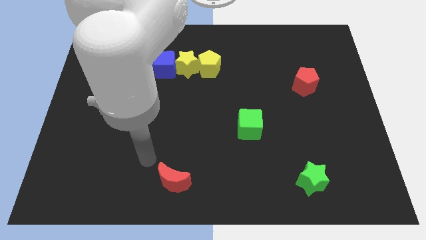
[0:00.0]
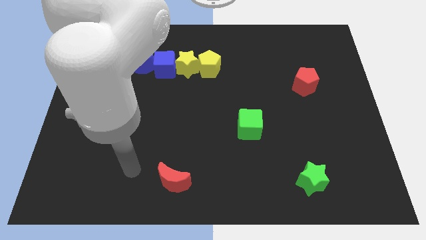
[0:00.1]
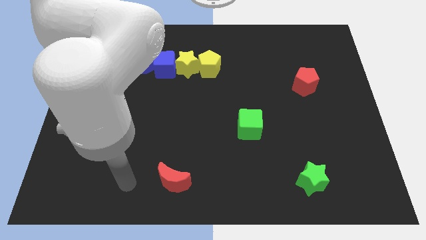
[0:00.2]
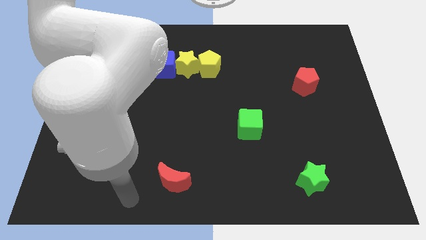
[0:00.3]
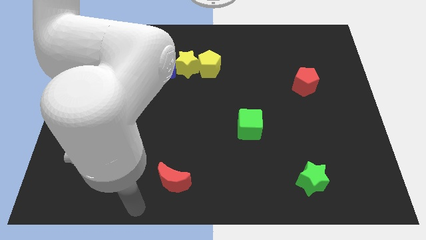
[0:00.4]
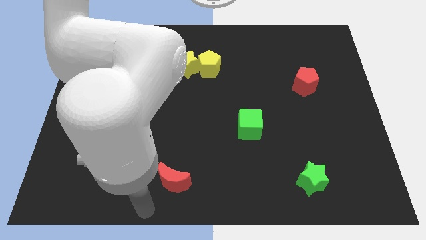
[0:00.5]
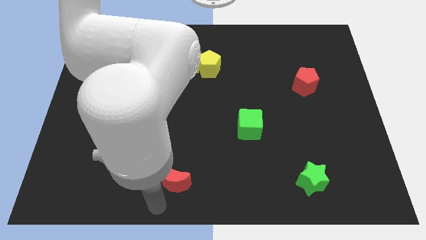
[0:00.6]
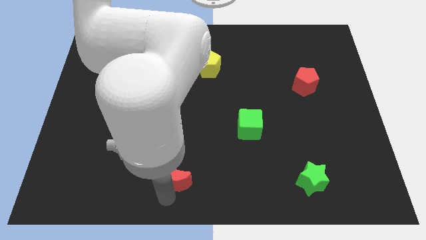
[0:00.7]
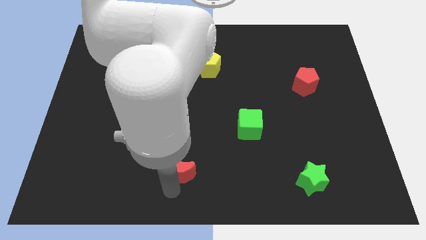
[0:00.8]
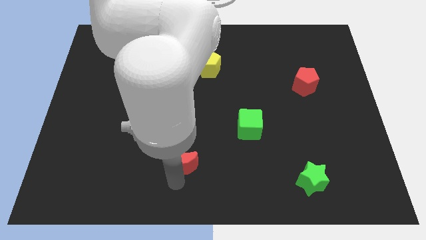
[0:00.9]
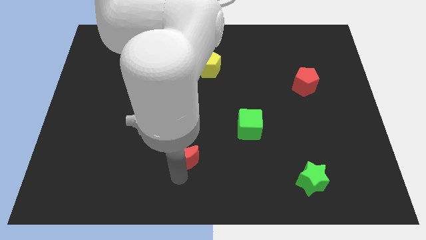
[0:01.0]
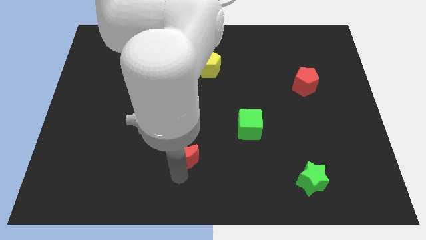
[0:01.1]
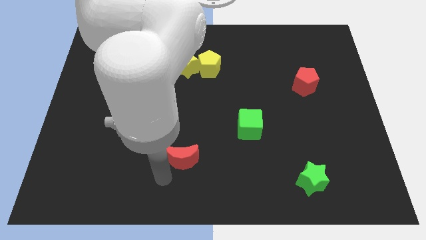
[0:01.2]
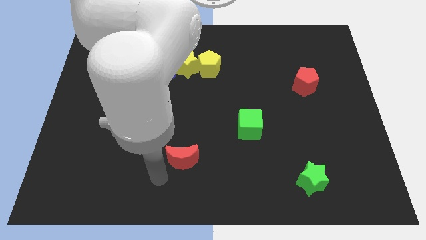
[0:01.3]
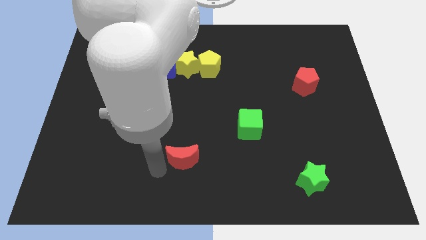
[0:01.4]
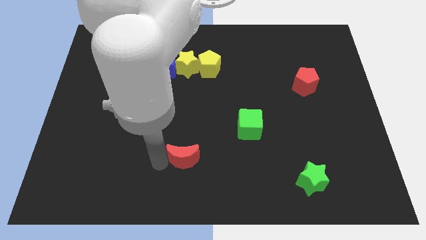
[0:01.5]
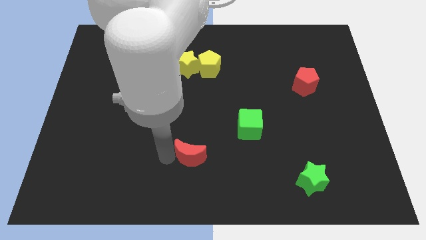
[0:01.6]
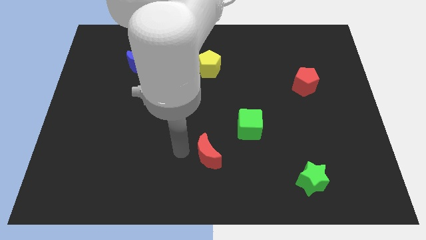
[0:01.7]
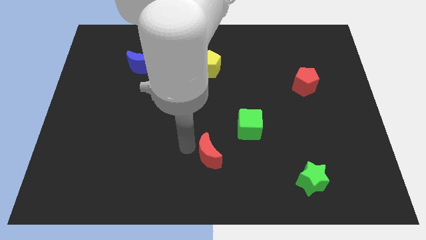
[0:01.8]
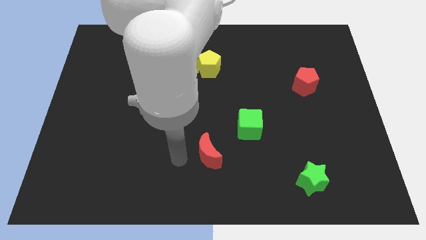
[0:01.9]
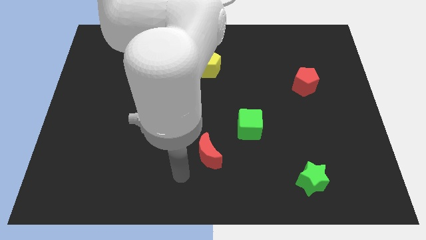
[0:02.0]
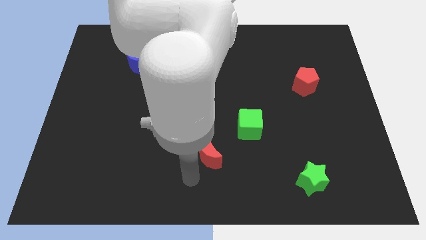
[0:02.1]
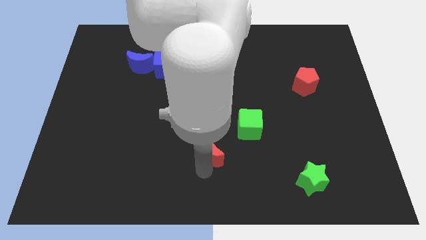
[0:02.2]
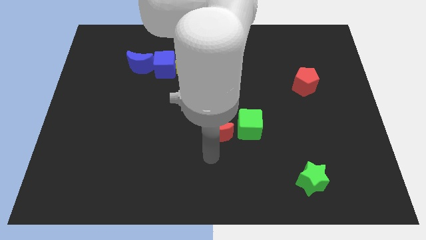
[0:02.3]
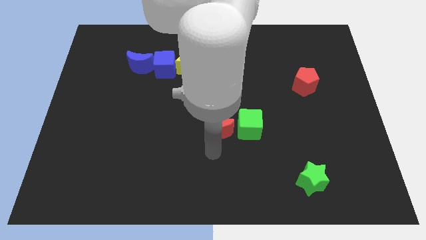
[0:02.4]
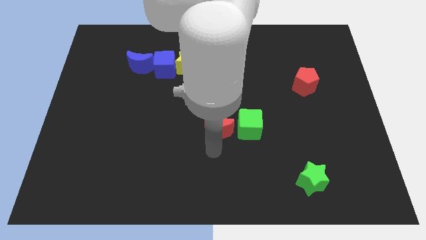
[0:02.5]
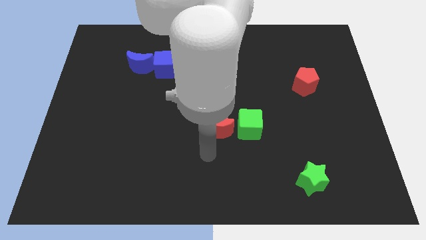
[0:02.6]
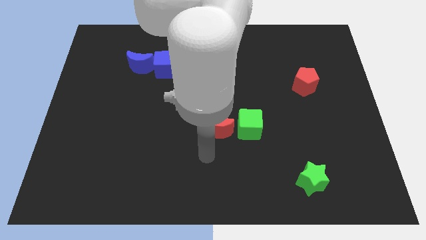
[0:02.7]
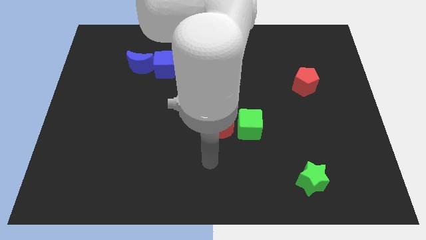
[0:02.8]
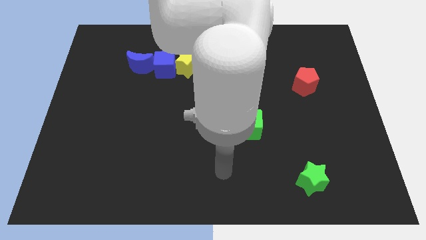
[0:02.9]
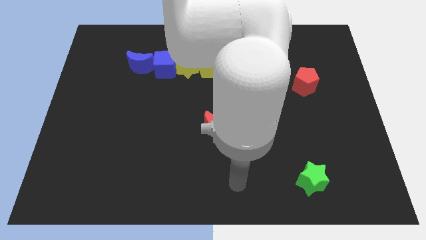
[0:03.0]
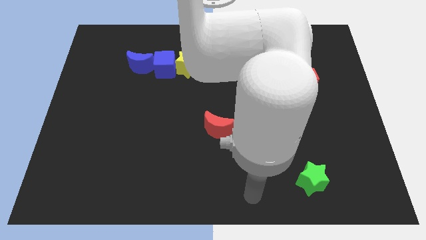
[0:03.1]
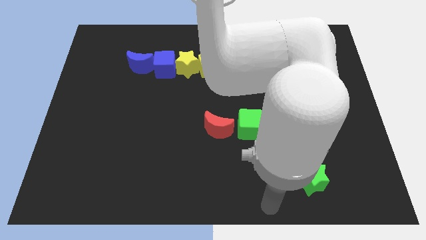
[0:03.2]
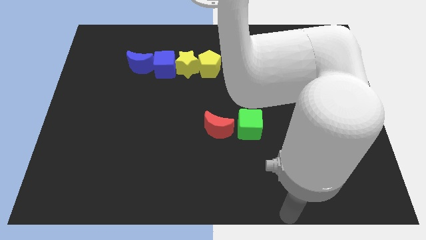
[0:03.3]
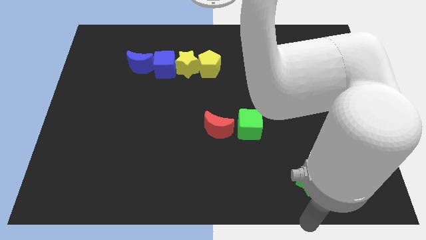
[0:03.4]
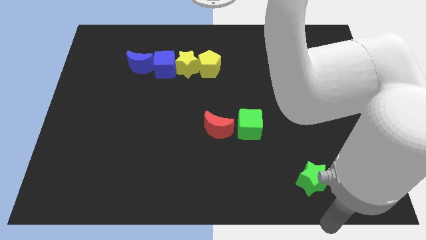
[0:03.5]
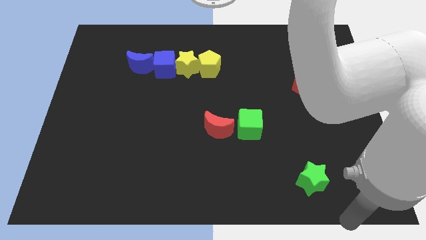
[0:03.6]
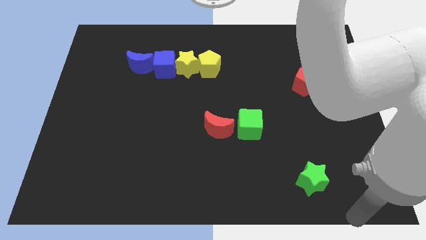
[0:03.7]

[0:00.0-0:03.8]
place the red pentagon to the left side of green cube

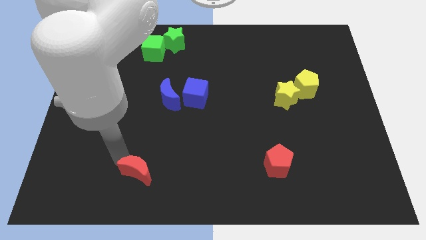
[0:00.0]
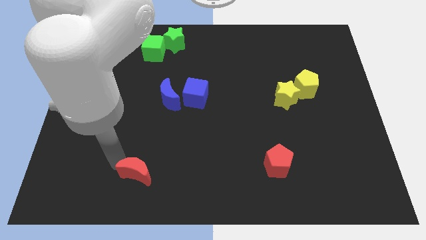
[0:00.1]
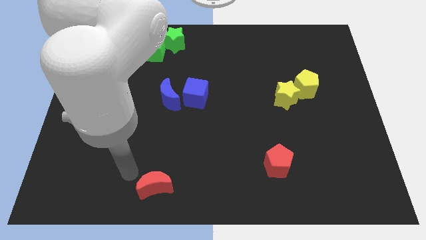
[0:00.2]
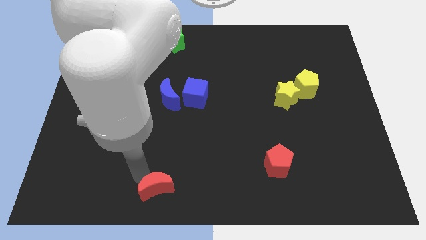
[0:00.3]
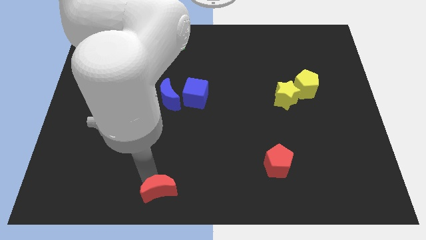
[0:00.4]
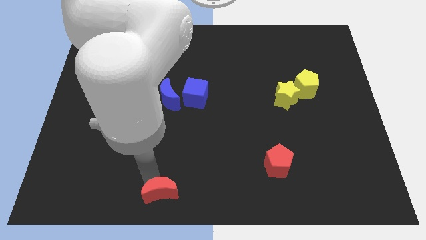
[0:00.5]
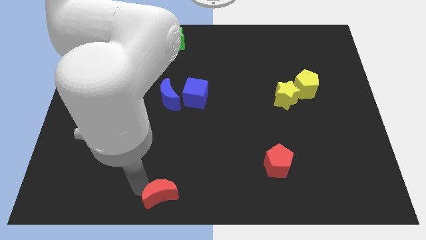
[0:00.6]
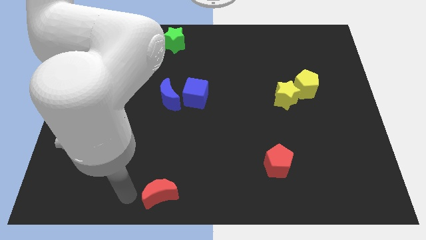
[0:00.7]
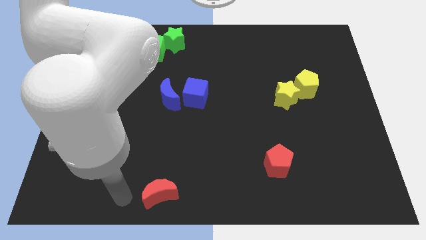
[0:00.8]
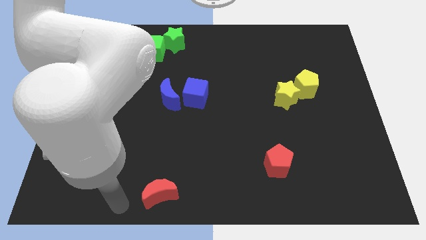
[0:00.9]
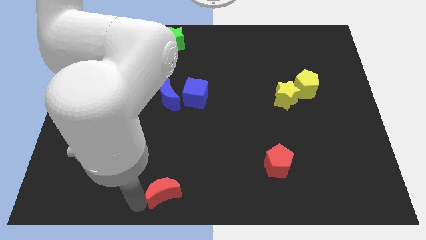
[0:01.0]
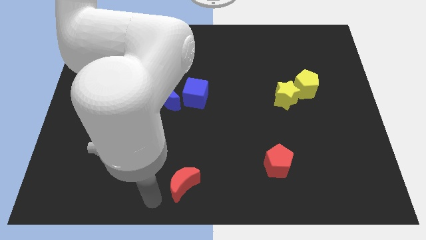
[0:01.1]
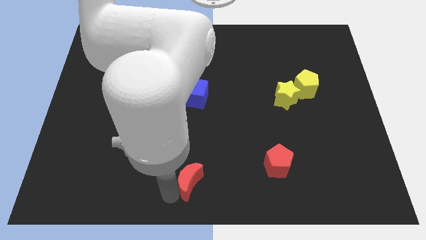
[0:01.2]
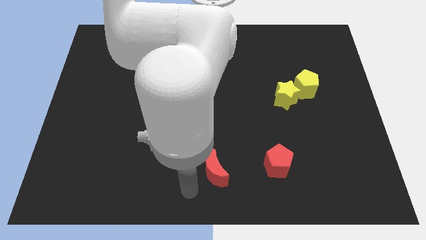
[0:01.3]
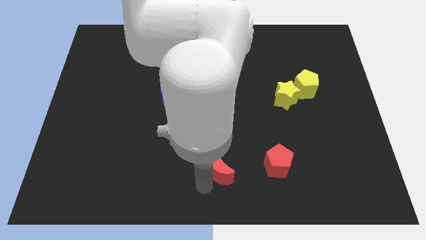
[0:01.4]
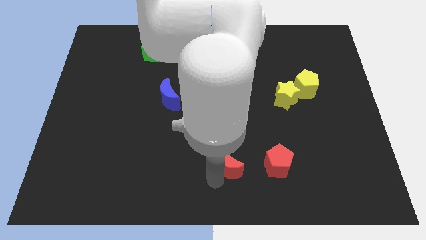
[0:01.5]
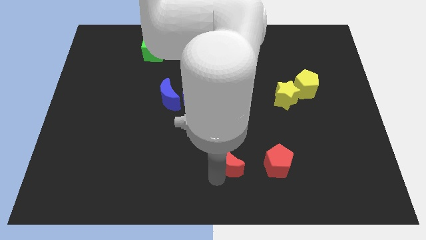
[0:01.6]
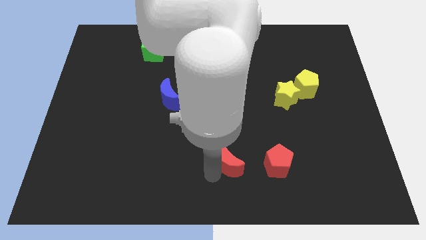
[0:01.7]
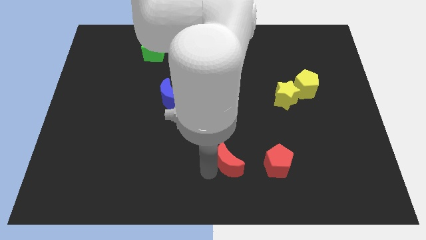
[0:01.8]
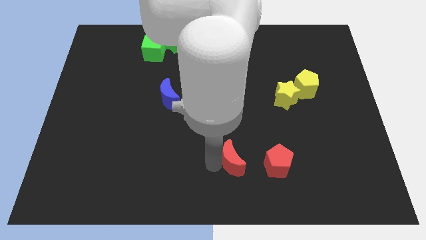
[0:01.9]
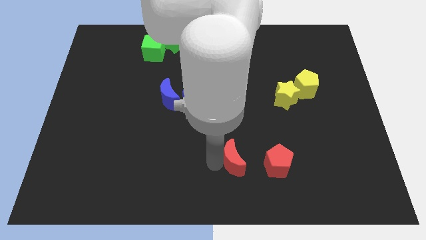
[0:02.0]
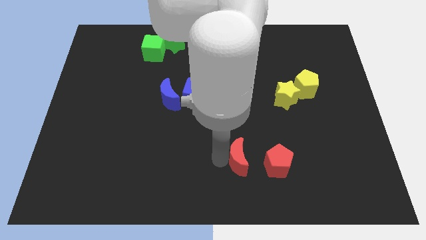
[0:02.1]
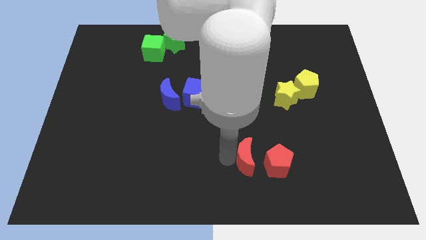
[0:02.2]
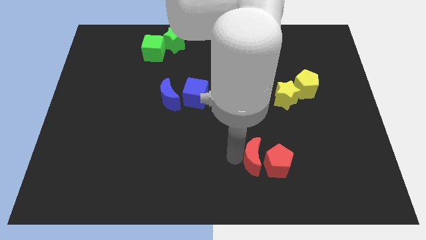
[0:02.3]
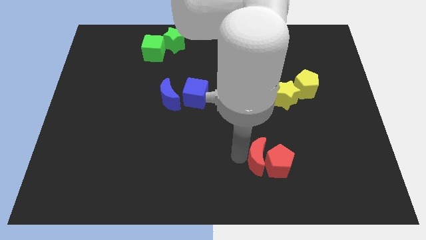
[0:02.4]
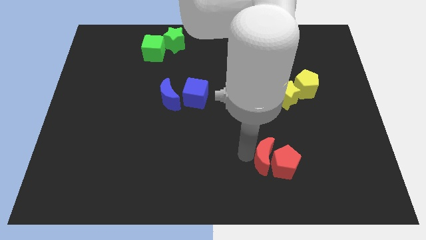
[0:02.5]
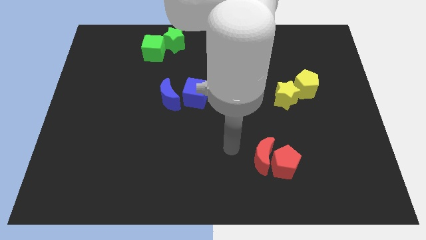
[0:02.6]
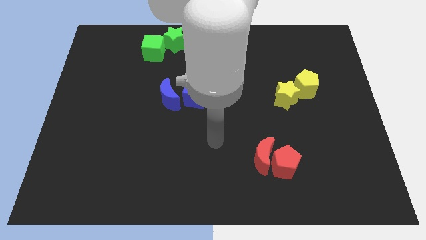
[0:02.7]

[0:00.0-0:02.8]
push the red crescent into the red pentagon

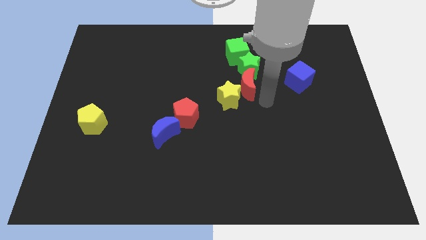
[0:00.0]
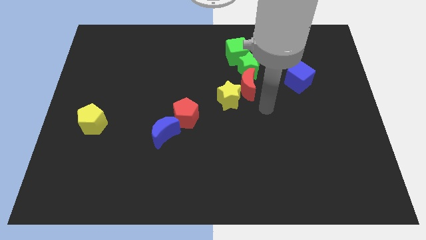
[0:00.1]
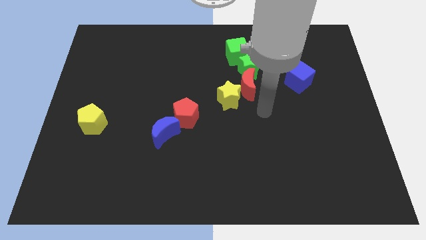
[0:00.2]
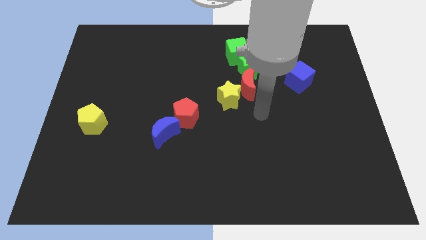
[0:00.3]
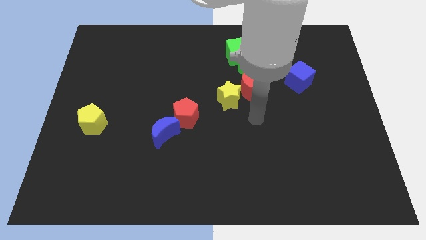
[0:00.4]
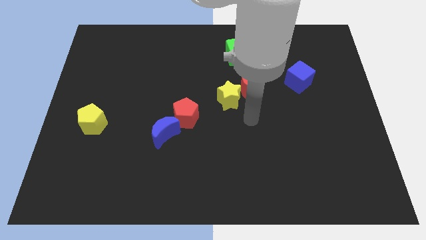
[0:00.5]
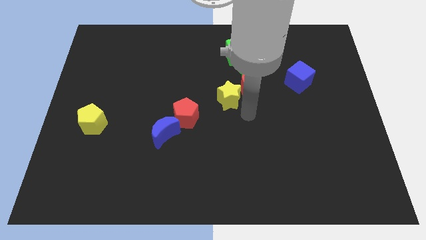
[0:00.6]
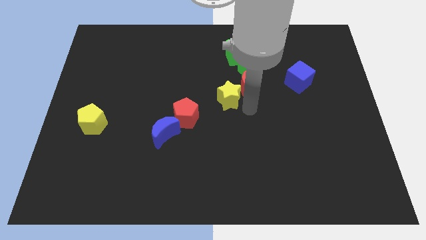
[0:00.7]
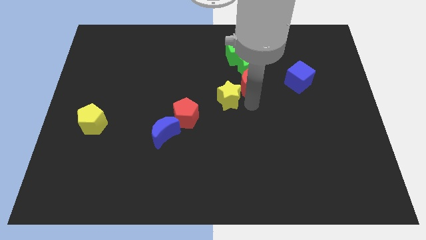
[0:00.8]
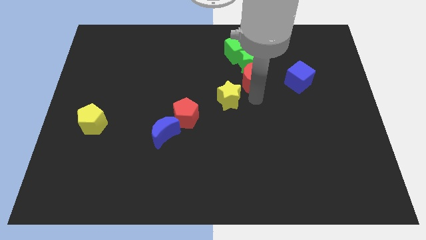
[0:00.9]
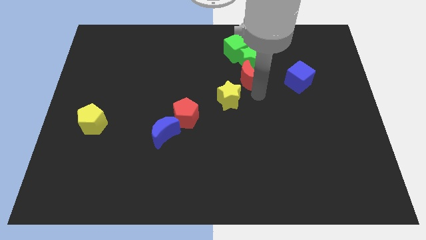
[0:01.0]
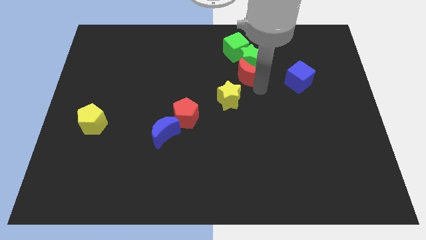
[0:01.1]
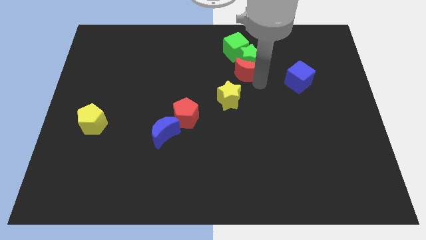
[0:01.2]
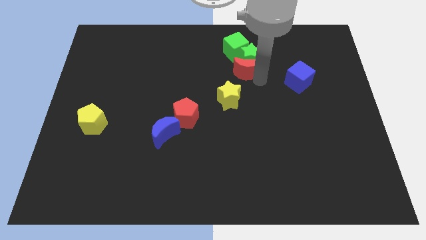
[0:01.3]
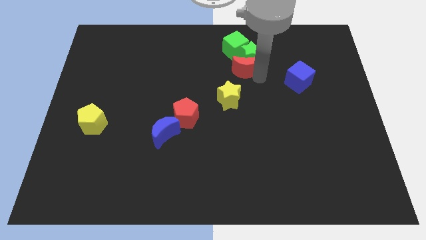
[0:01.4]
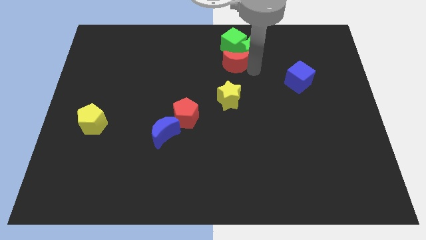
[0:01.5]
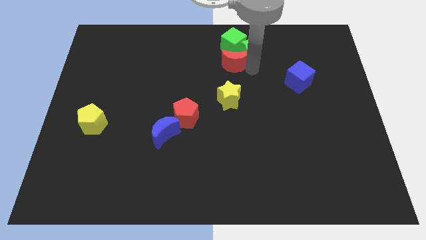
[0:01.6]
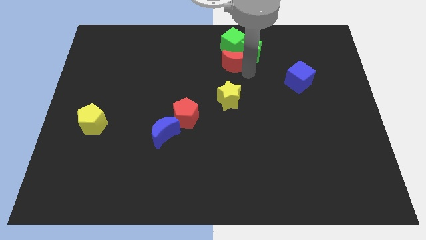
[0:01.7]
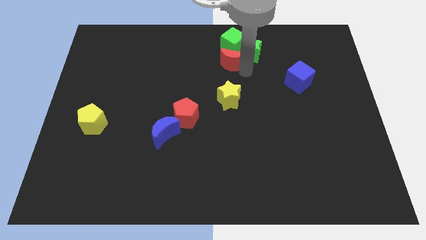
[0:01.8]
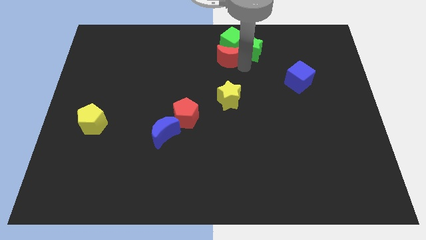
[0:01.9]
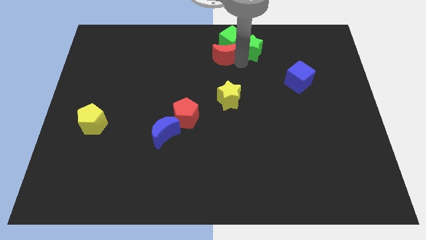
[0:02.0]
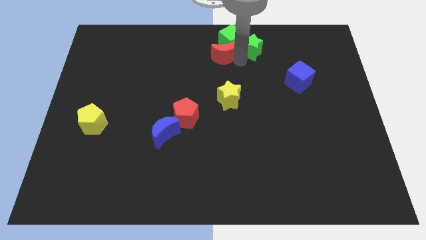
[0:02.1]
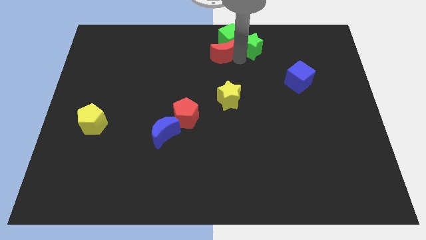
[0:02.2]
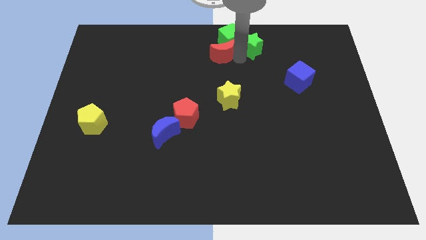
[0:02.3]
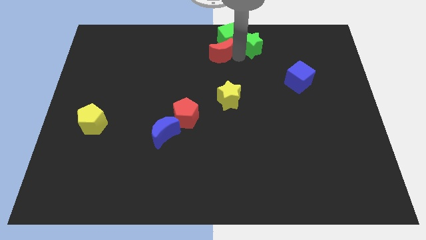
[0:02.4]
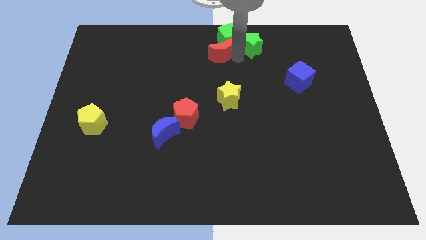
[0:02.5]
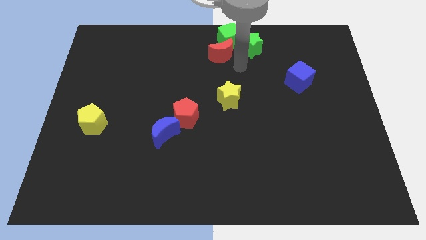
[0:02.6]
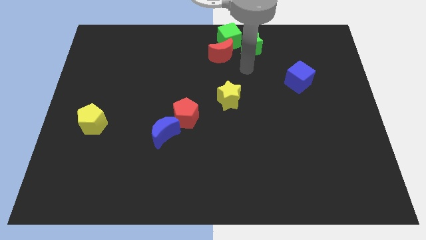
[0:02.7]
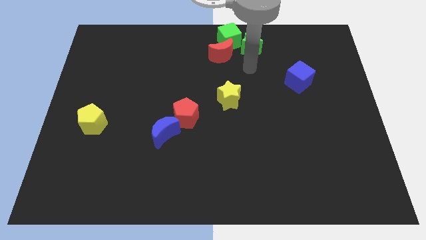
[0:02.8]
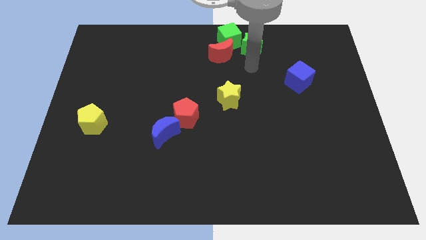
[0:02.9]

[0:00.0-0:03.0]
push the green cube with red moon
